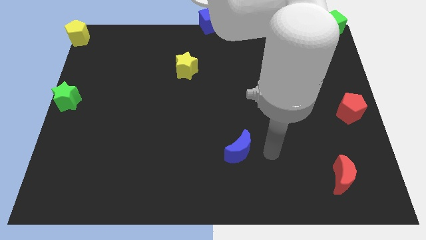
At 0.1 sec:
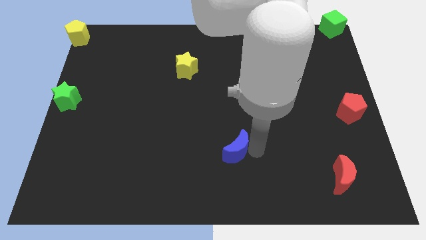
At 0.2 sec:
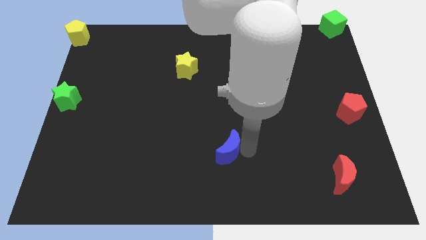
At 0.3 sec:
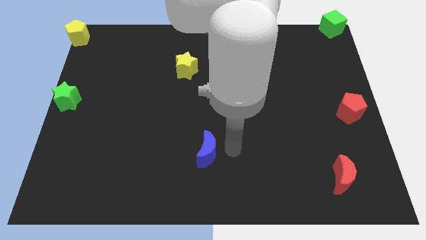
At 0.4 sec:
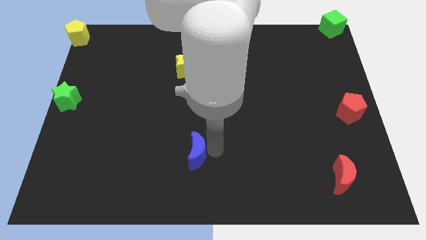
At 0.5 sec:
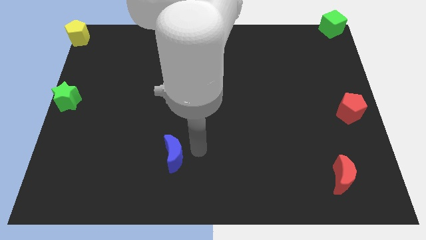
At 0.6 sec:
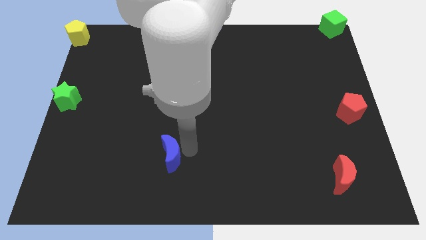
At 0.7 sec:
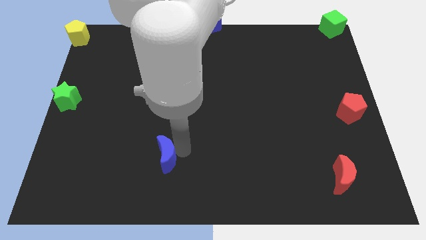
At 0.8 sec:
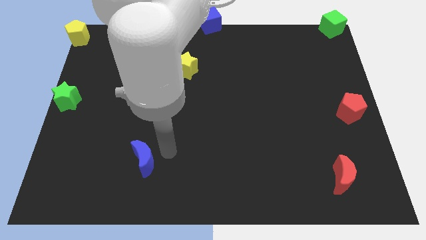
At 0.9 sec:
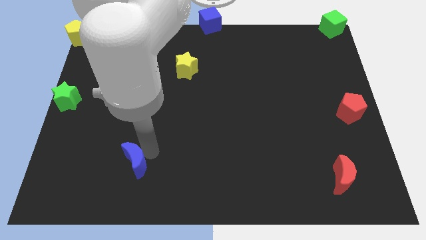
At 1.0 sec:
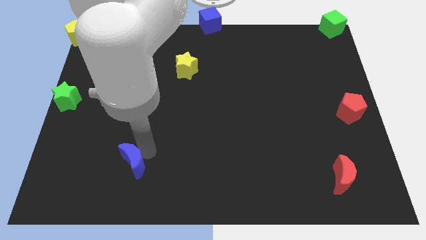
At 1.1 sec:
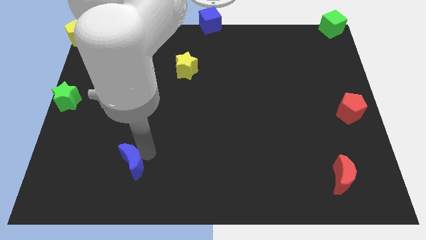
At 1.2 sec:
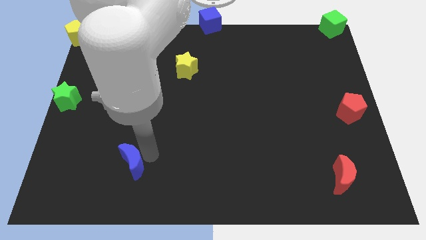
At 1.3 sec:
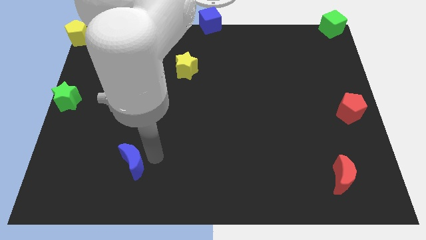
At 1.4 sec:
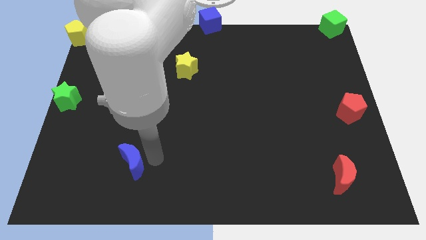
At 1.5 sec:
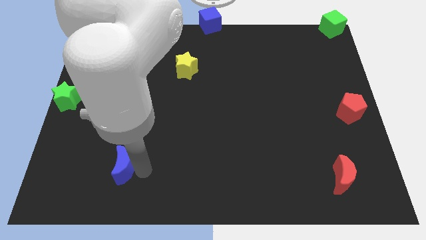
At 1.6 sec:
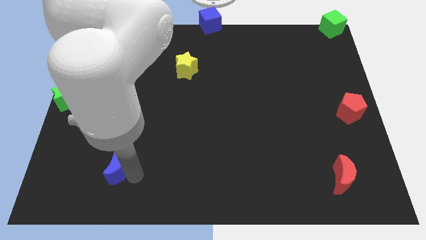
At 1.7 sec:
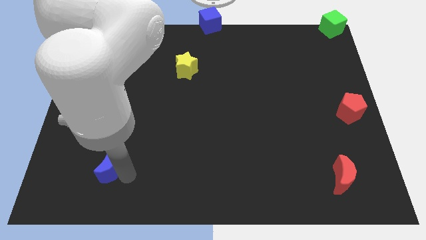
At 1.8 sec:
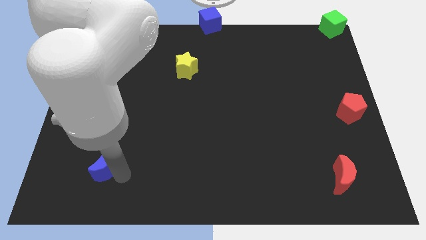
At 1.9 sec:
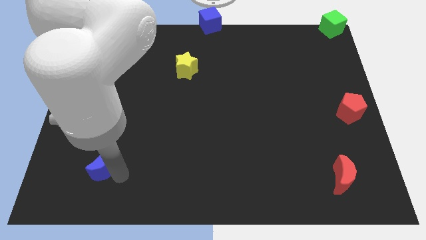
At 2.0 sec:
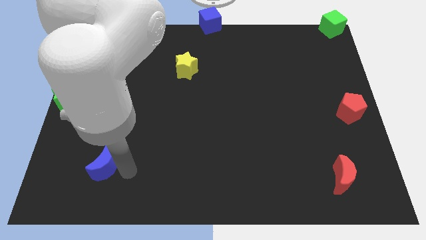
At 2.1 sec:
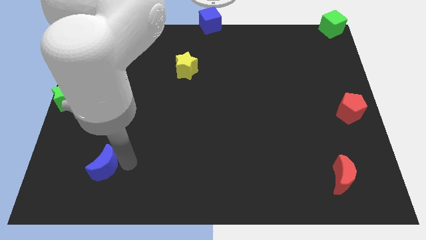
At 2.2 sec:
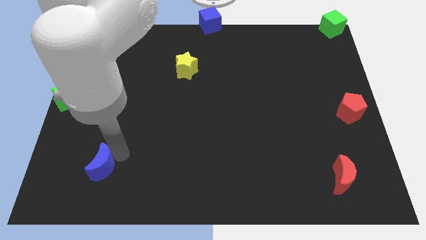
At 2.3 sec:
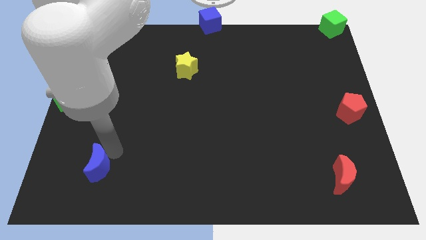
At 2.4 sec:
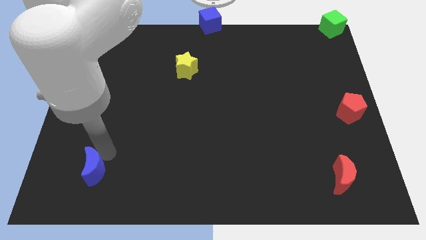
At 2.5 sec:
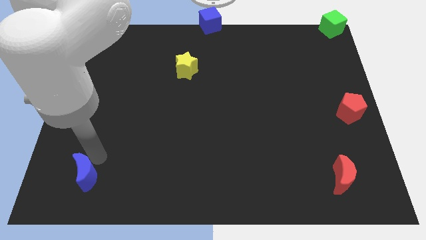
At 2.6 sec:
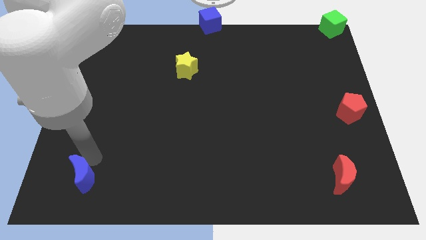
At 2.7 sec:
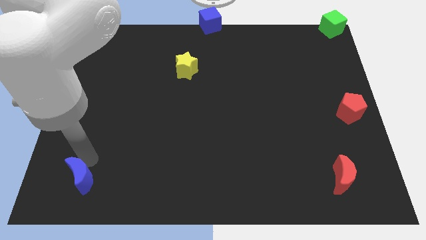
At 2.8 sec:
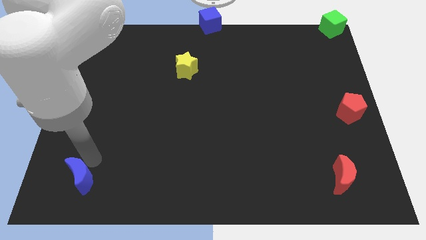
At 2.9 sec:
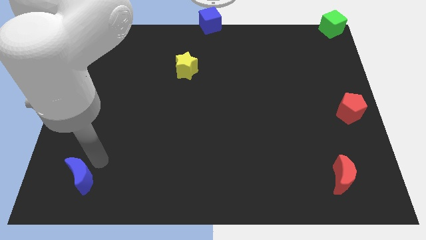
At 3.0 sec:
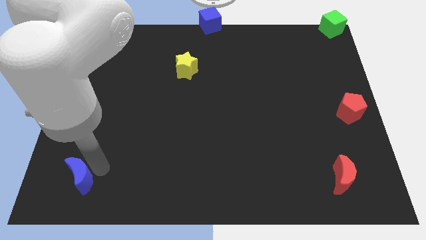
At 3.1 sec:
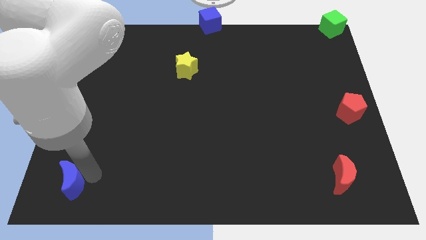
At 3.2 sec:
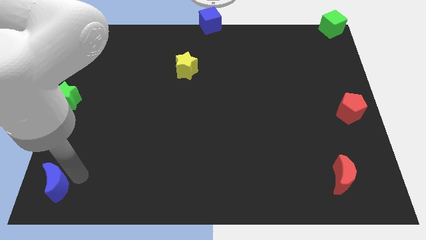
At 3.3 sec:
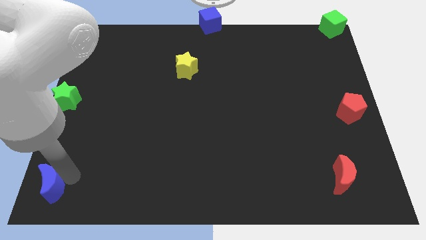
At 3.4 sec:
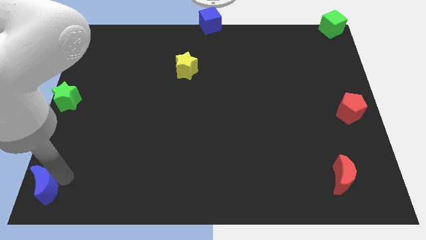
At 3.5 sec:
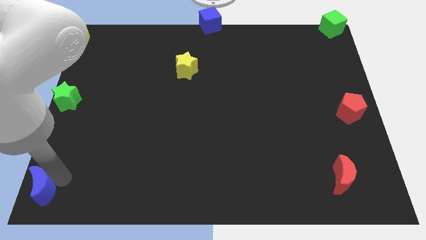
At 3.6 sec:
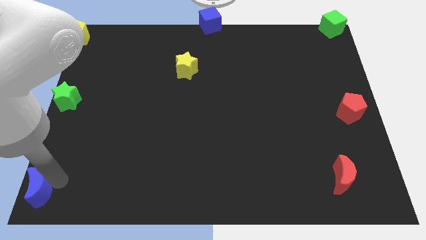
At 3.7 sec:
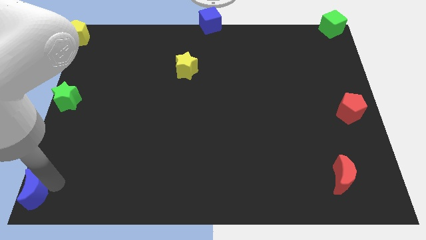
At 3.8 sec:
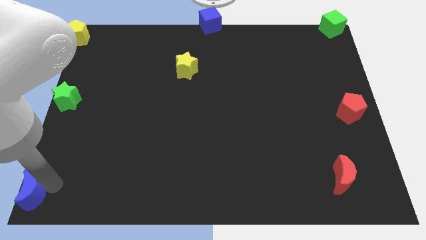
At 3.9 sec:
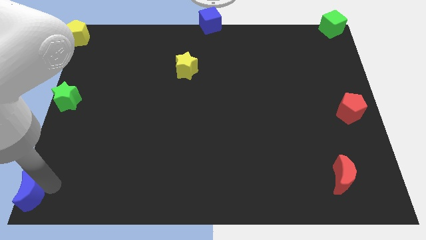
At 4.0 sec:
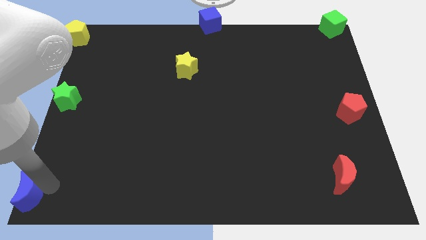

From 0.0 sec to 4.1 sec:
place blue crescent towards bottom left corner

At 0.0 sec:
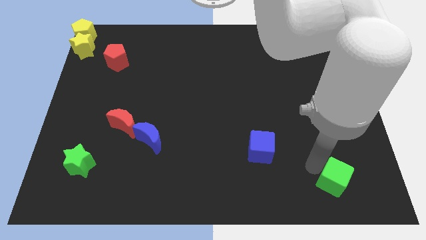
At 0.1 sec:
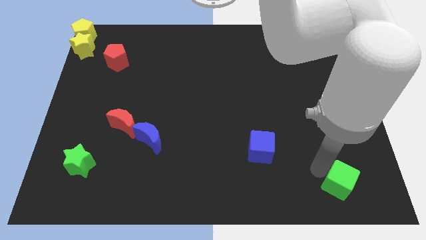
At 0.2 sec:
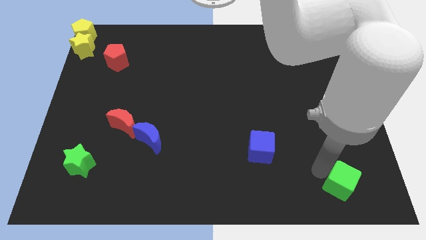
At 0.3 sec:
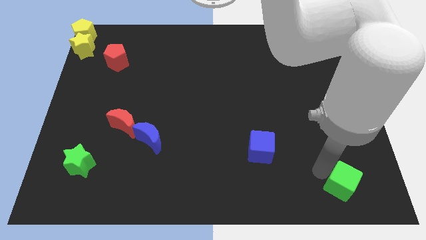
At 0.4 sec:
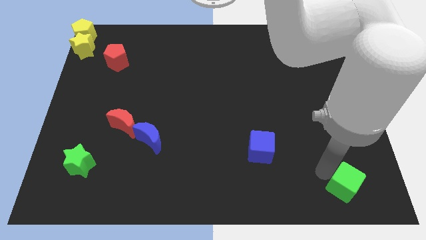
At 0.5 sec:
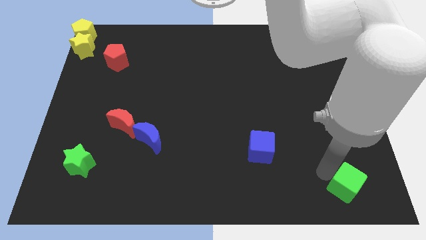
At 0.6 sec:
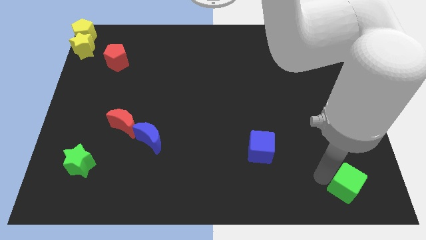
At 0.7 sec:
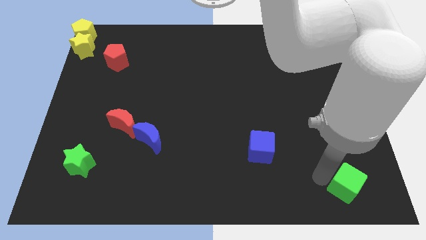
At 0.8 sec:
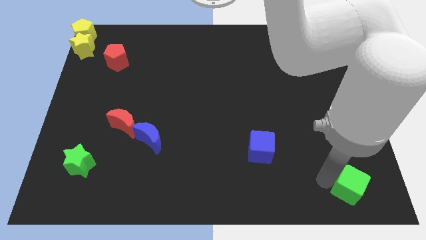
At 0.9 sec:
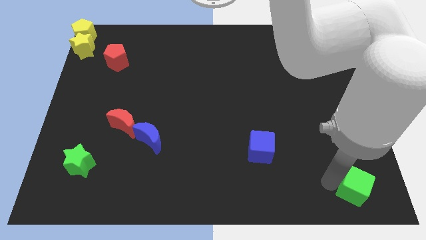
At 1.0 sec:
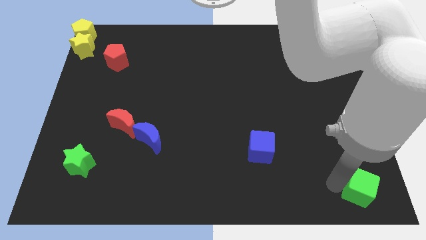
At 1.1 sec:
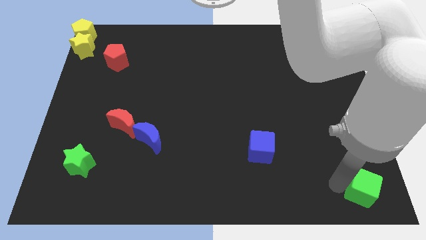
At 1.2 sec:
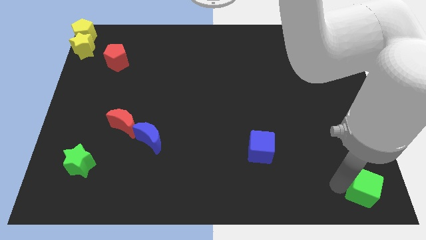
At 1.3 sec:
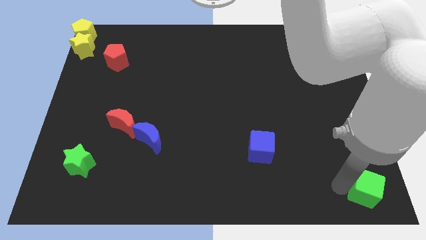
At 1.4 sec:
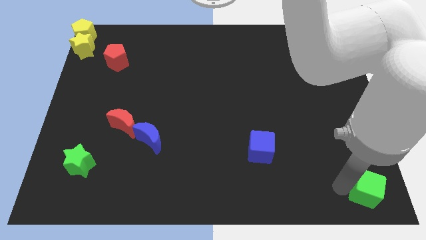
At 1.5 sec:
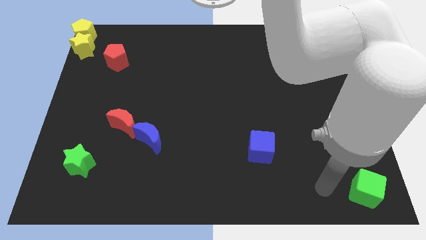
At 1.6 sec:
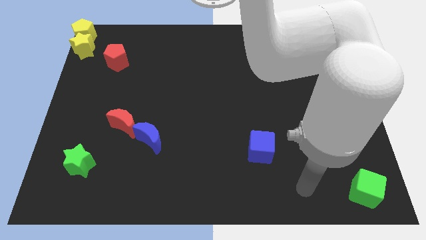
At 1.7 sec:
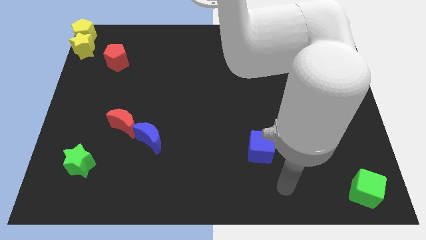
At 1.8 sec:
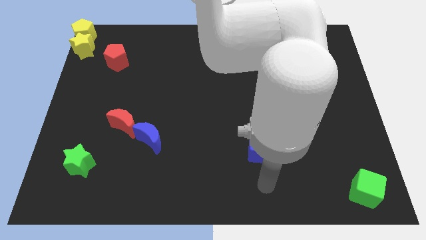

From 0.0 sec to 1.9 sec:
move the green cube towards the bottom right

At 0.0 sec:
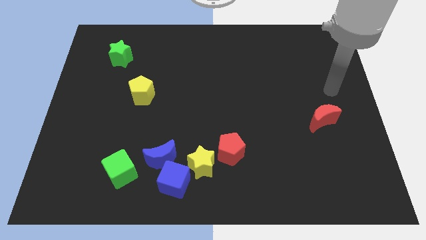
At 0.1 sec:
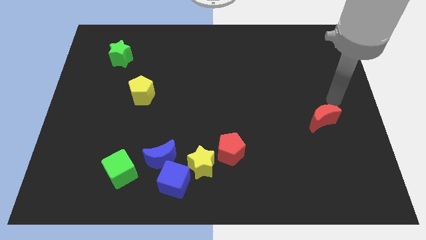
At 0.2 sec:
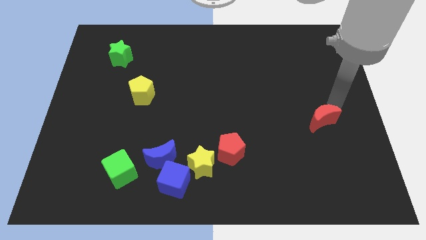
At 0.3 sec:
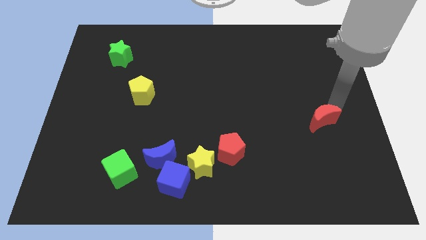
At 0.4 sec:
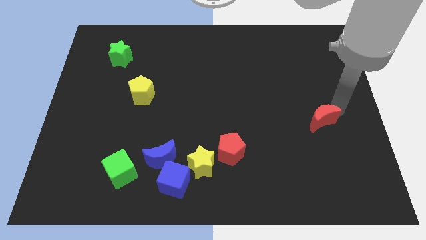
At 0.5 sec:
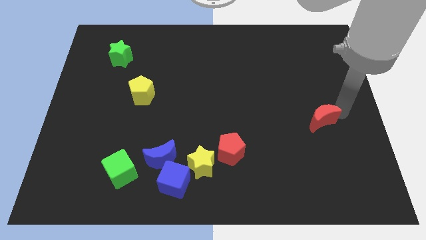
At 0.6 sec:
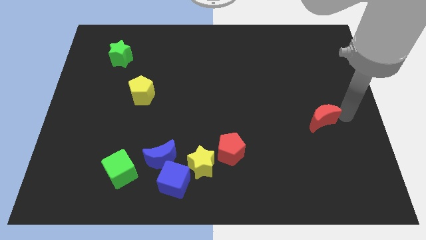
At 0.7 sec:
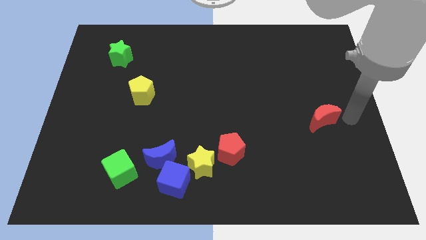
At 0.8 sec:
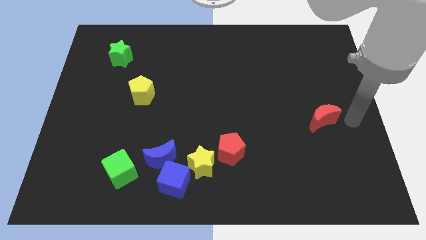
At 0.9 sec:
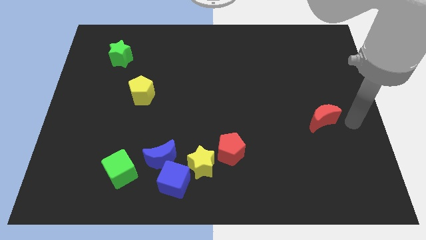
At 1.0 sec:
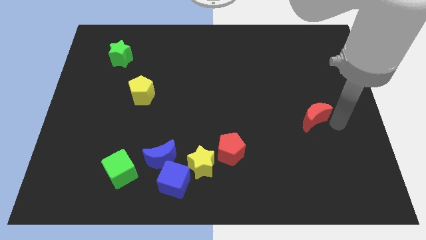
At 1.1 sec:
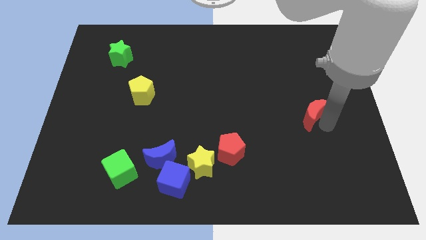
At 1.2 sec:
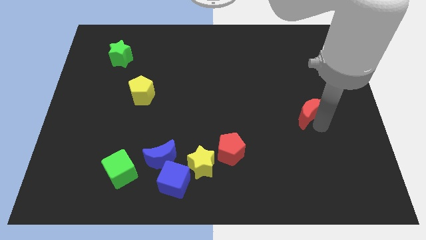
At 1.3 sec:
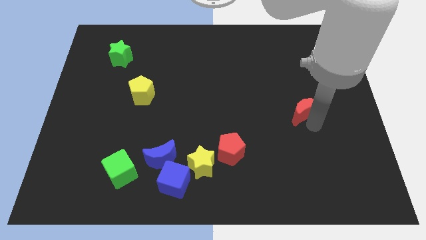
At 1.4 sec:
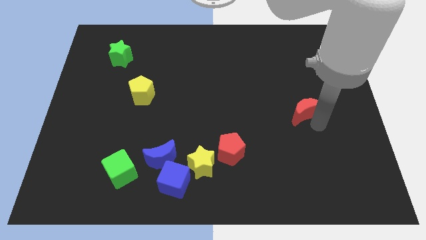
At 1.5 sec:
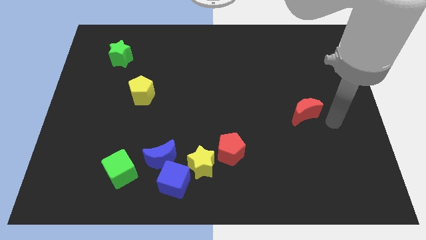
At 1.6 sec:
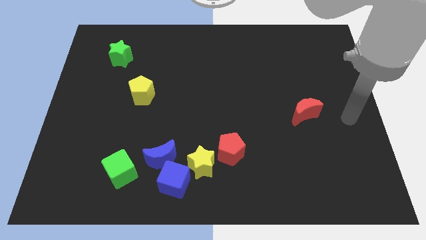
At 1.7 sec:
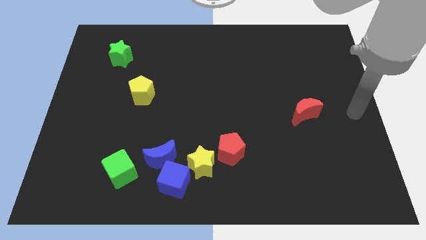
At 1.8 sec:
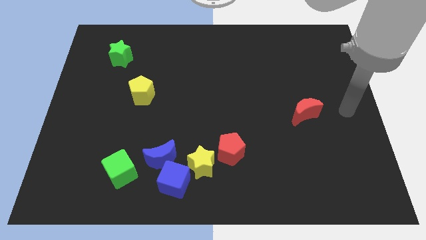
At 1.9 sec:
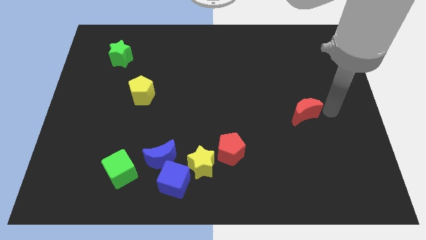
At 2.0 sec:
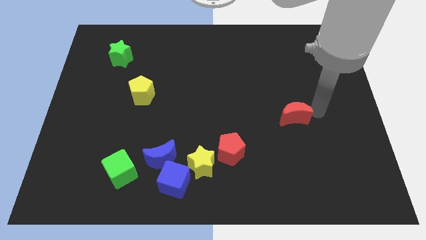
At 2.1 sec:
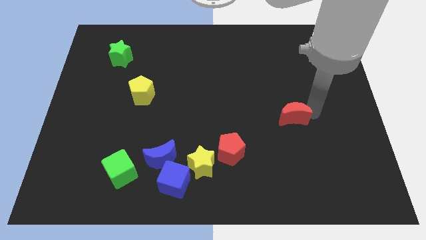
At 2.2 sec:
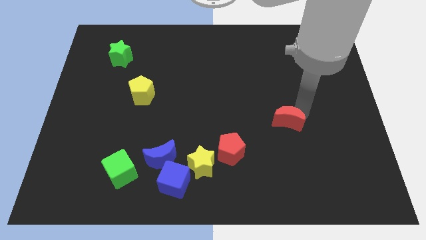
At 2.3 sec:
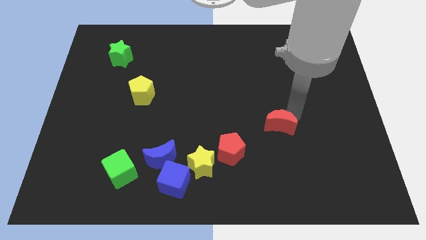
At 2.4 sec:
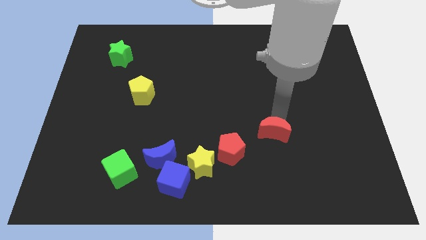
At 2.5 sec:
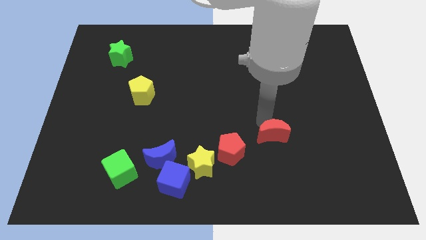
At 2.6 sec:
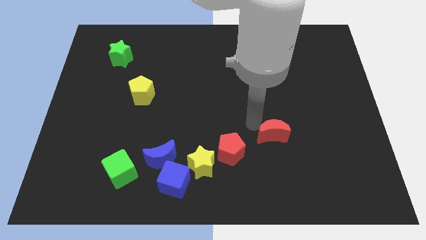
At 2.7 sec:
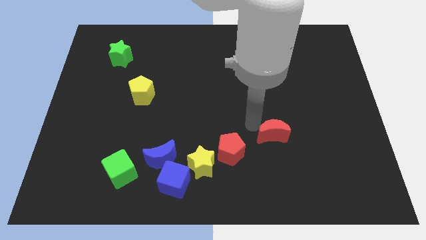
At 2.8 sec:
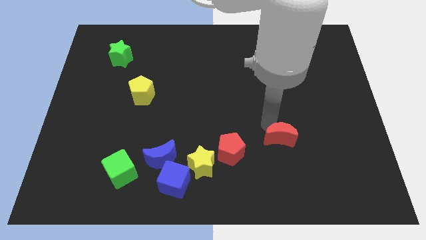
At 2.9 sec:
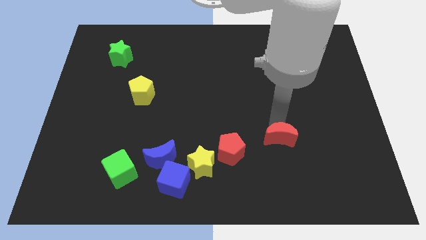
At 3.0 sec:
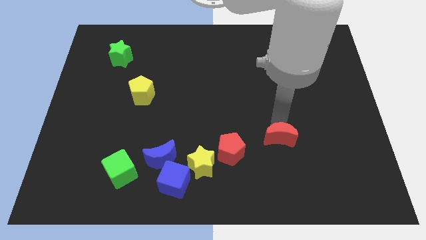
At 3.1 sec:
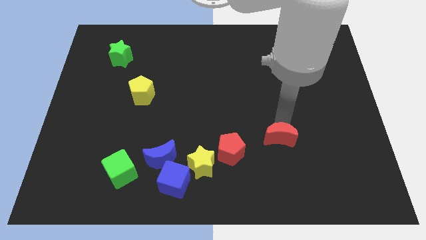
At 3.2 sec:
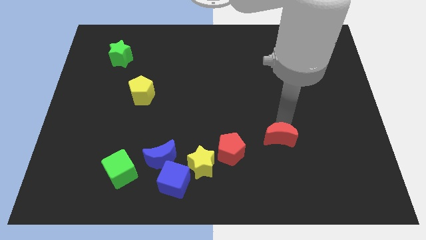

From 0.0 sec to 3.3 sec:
drag red moon near red pentagon
